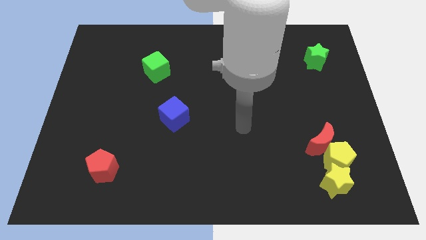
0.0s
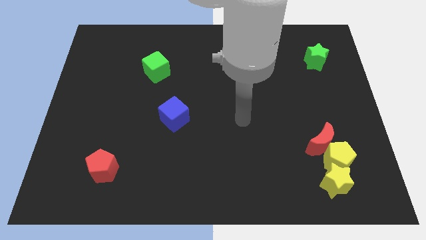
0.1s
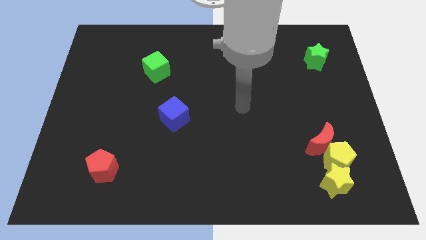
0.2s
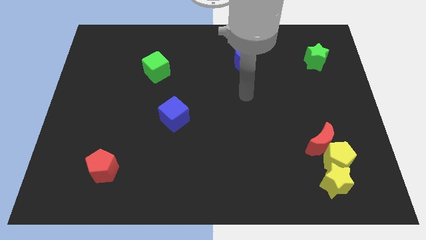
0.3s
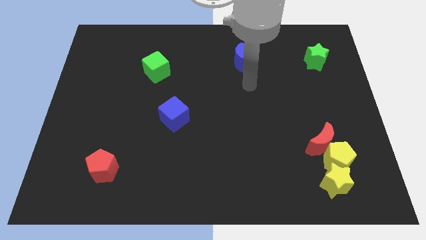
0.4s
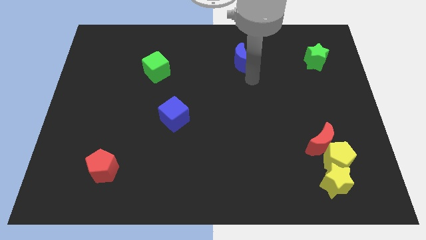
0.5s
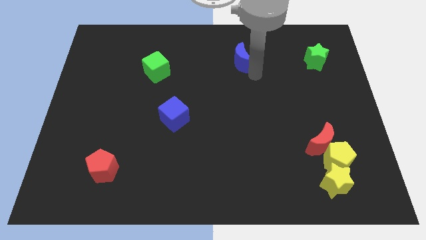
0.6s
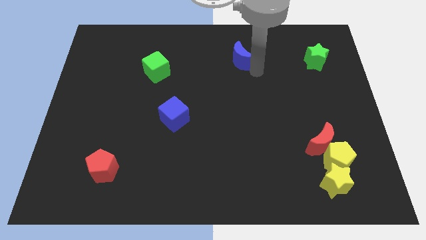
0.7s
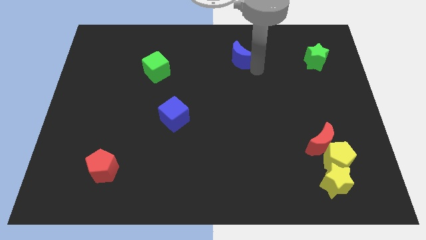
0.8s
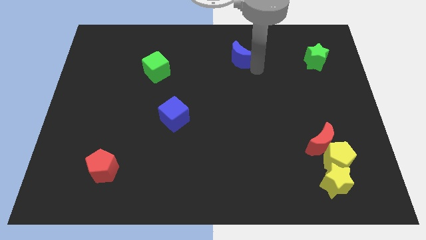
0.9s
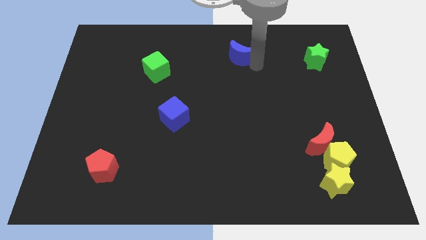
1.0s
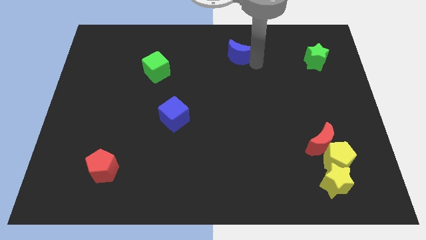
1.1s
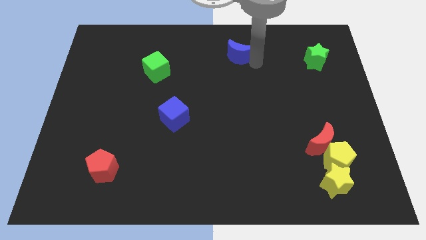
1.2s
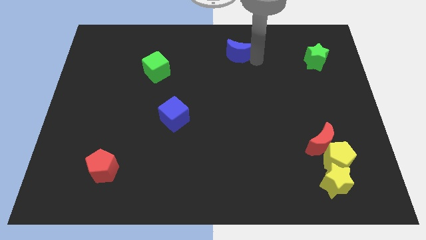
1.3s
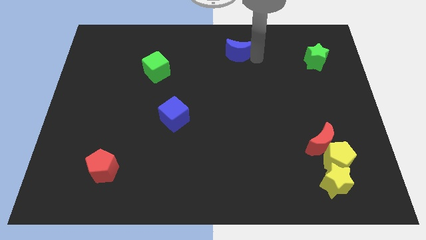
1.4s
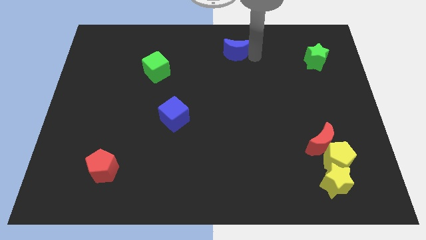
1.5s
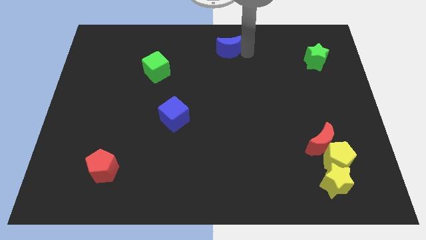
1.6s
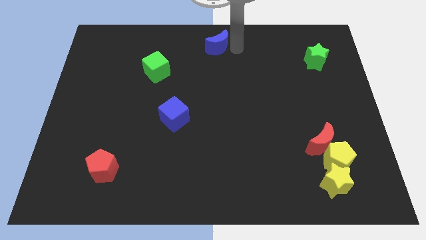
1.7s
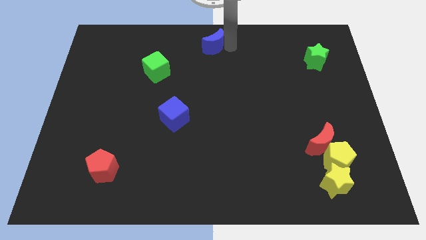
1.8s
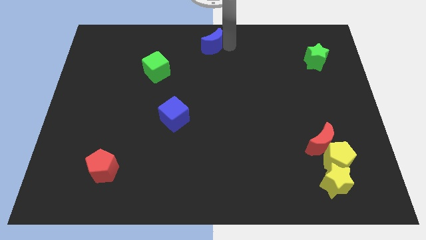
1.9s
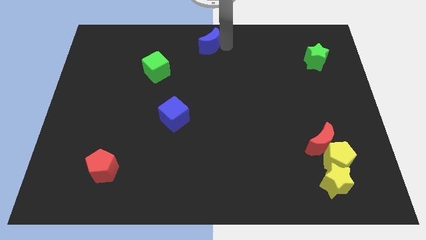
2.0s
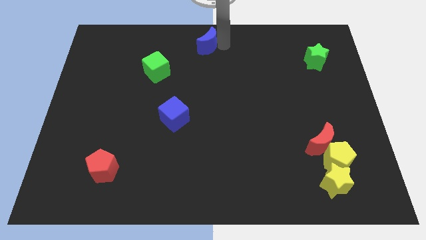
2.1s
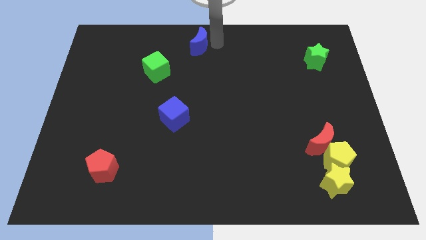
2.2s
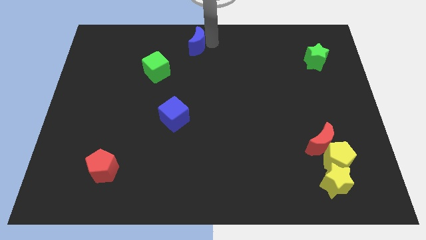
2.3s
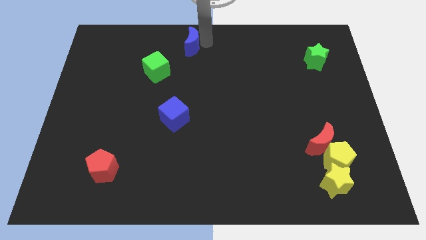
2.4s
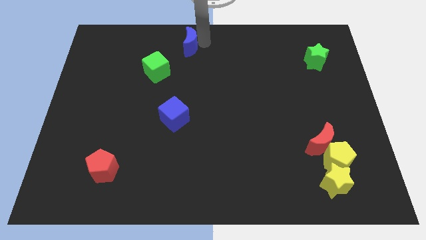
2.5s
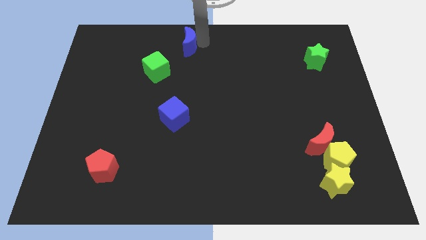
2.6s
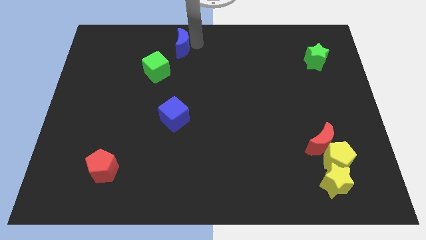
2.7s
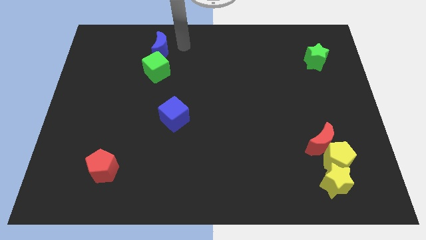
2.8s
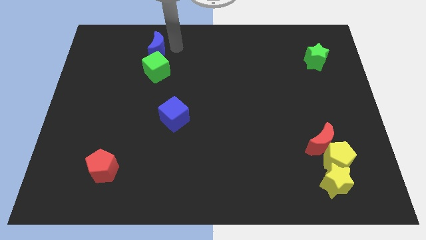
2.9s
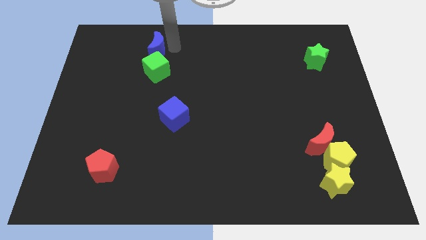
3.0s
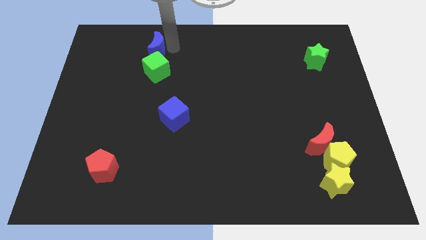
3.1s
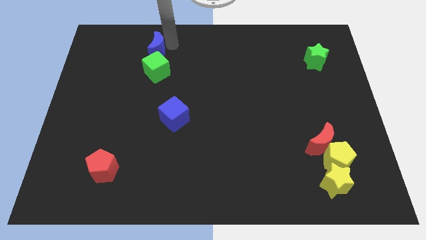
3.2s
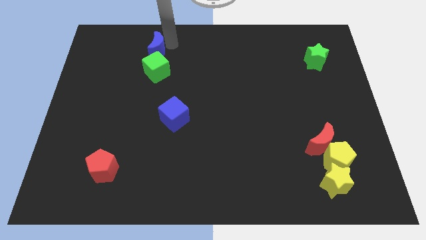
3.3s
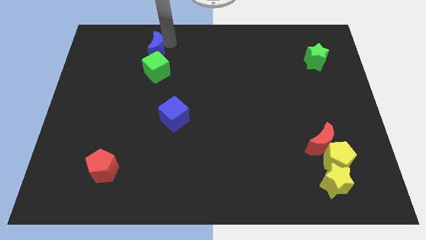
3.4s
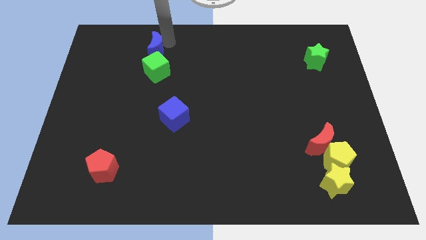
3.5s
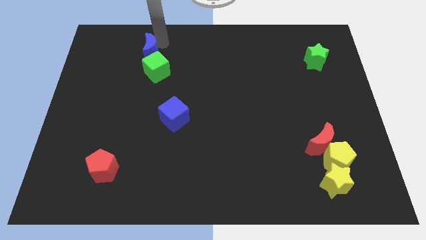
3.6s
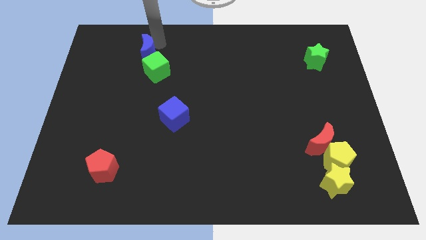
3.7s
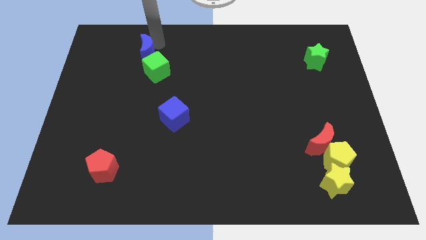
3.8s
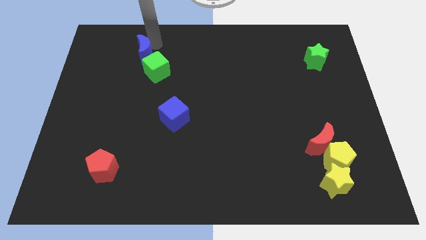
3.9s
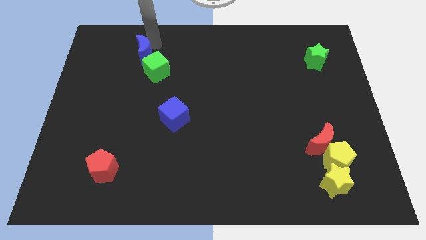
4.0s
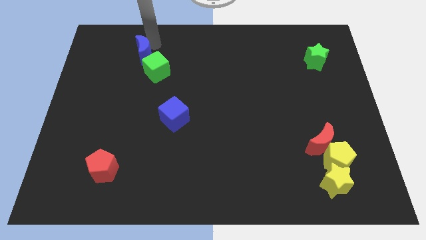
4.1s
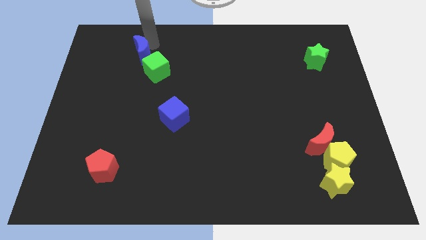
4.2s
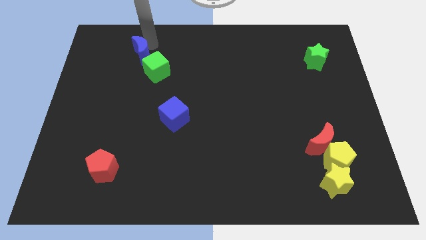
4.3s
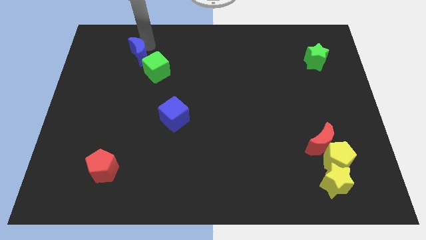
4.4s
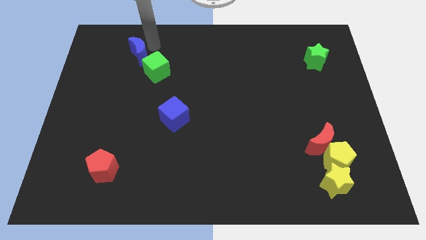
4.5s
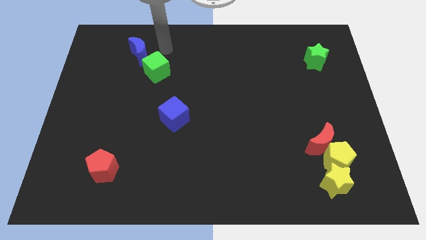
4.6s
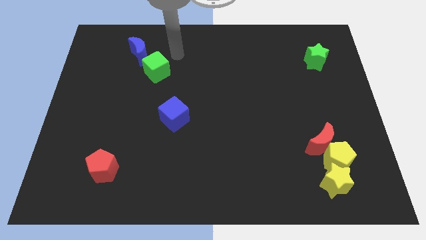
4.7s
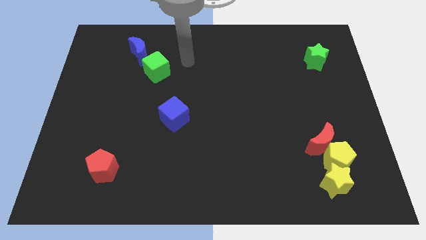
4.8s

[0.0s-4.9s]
push the blue crescent towards the green cube

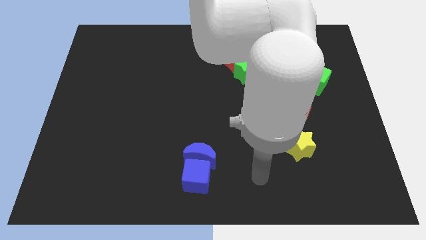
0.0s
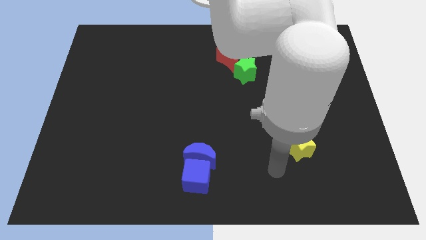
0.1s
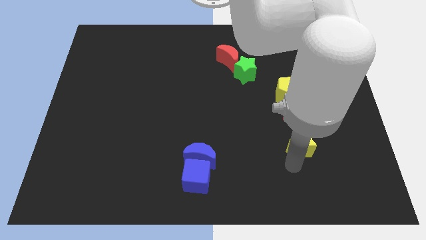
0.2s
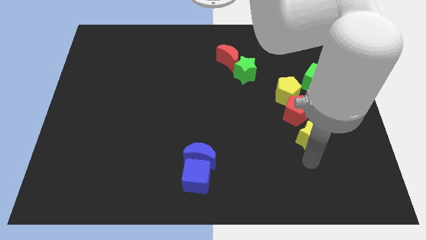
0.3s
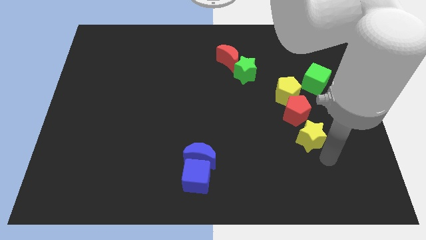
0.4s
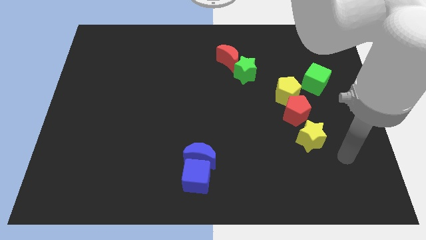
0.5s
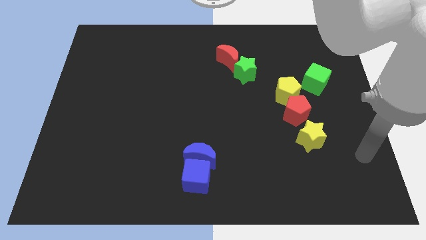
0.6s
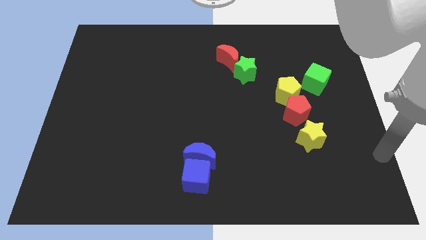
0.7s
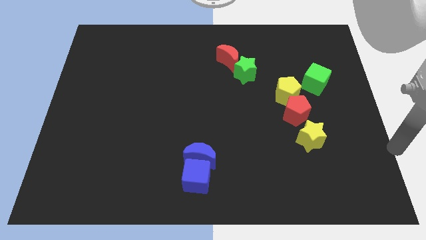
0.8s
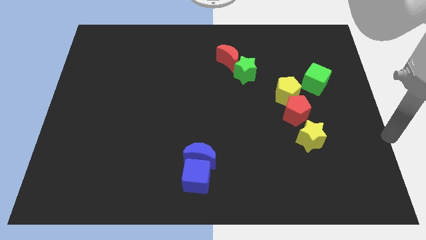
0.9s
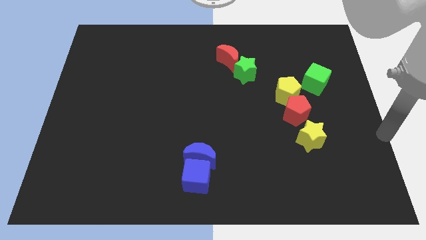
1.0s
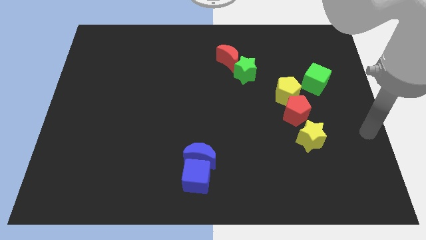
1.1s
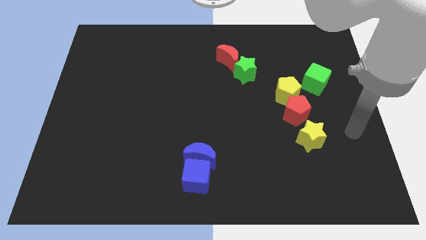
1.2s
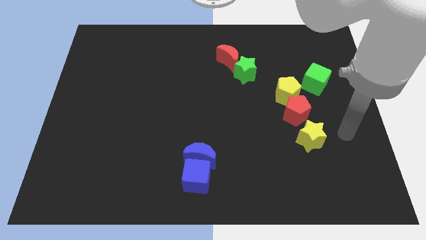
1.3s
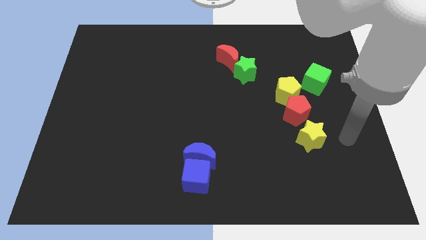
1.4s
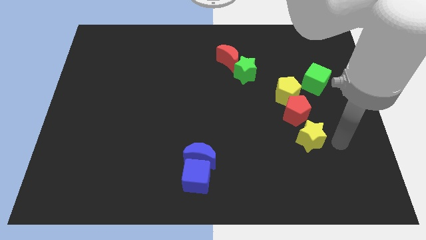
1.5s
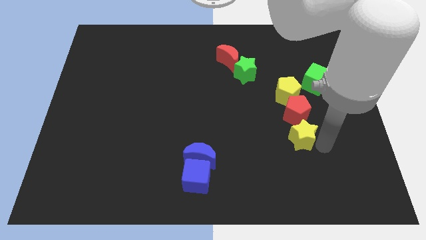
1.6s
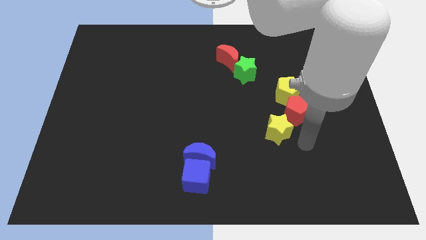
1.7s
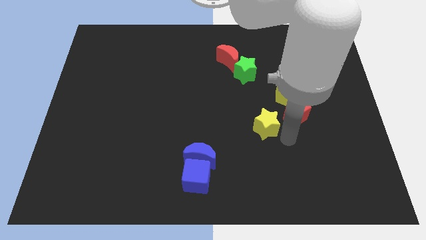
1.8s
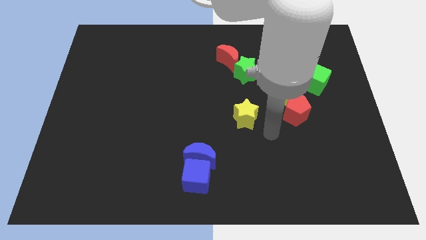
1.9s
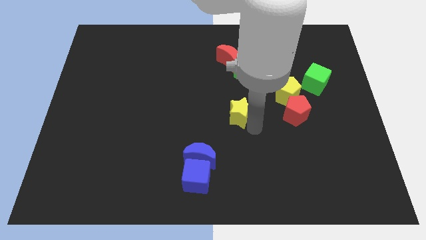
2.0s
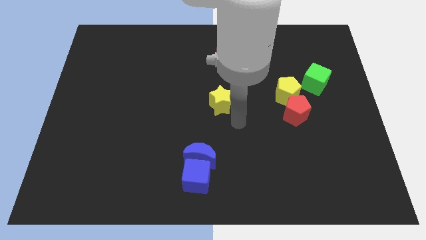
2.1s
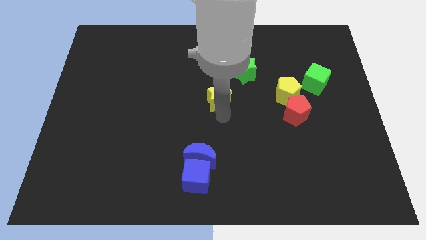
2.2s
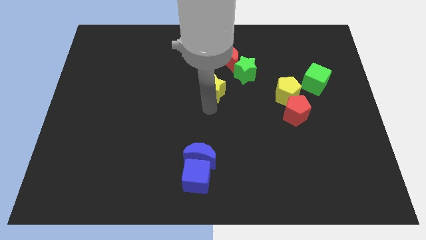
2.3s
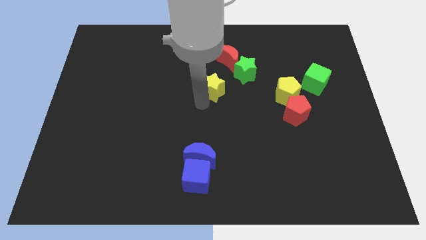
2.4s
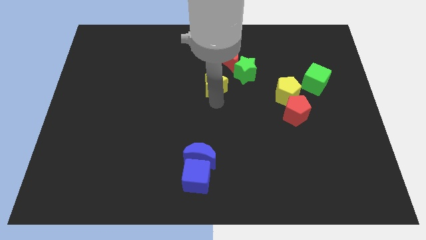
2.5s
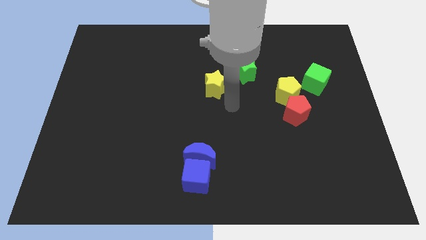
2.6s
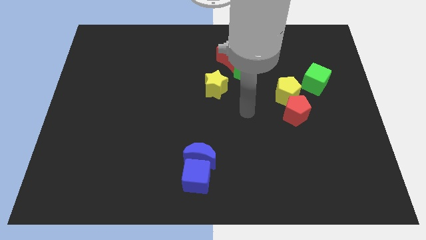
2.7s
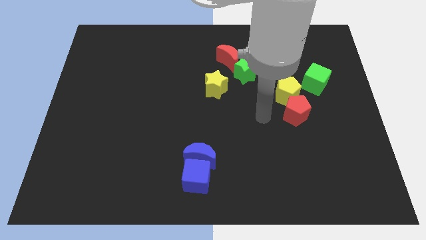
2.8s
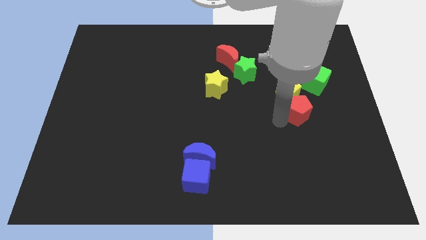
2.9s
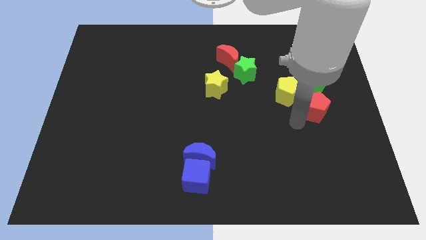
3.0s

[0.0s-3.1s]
push the yellow star at bottom left to green star

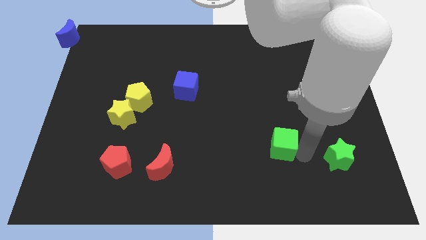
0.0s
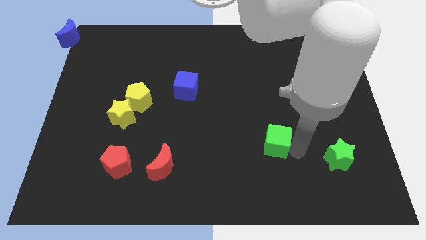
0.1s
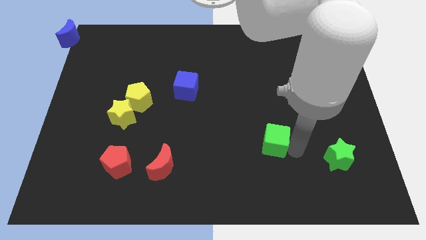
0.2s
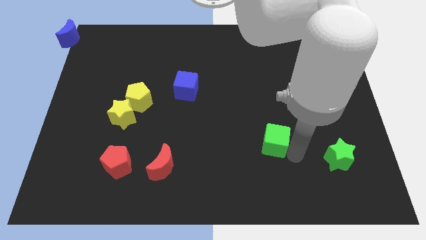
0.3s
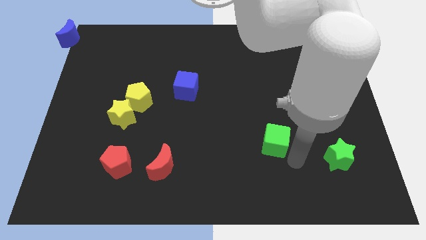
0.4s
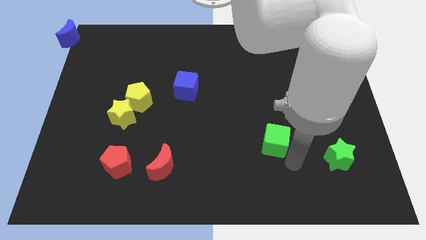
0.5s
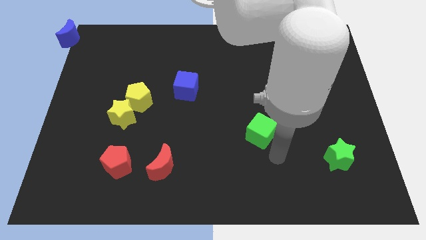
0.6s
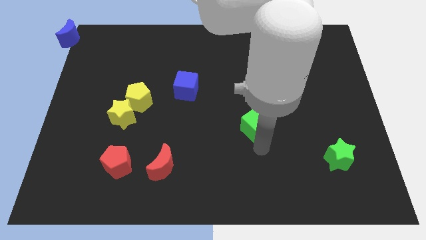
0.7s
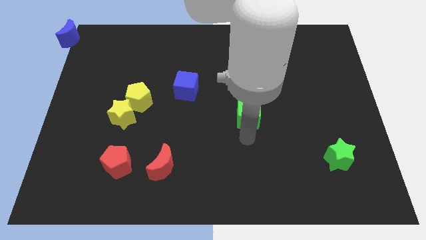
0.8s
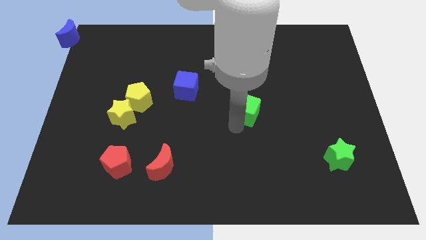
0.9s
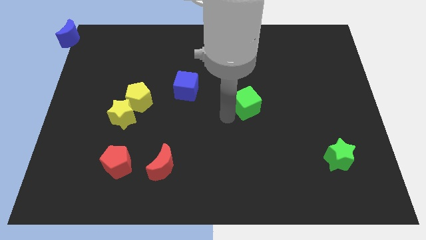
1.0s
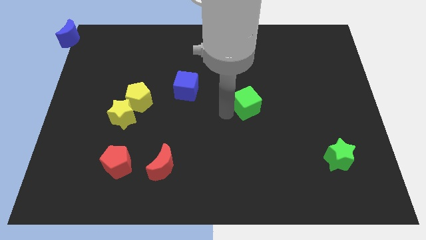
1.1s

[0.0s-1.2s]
move the green cube slightly up
